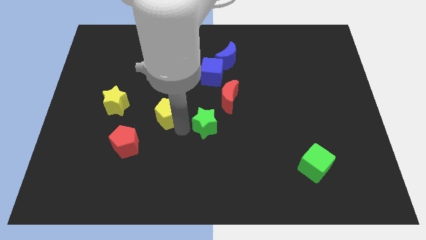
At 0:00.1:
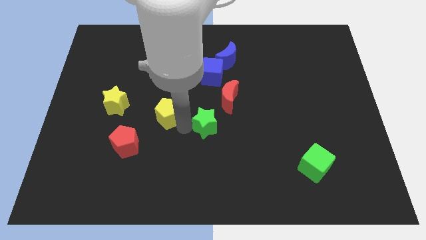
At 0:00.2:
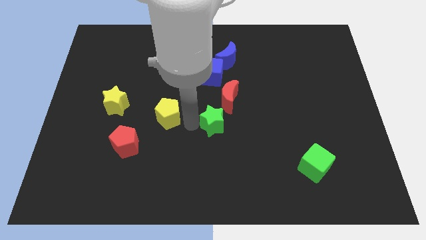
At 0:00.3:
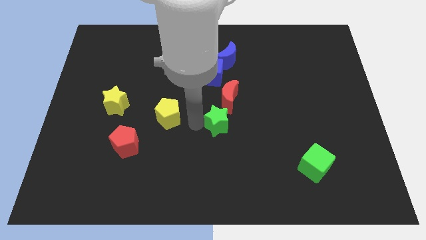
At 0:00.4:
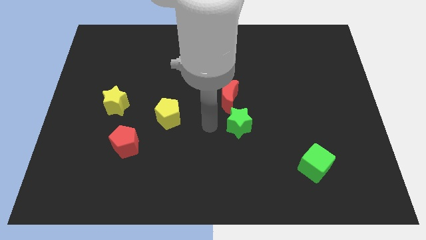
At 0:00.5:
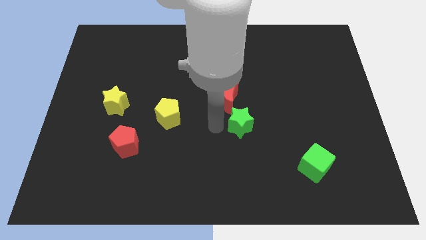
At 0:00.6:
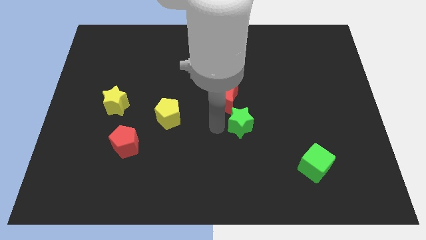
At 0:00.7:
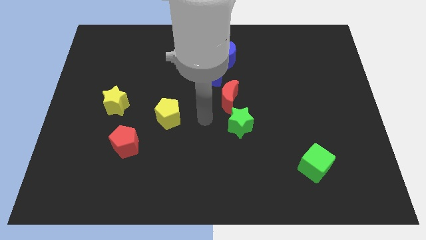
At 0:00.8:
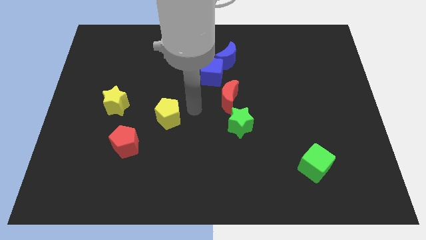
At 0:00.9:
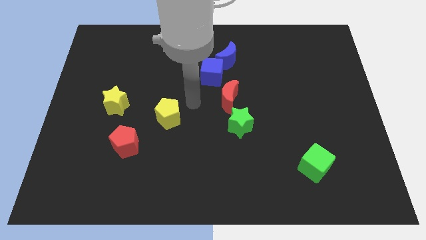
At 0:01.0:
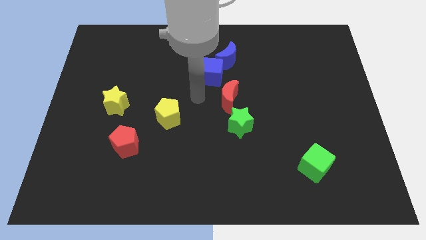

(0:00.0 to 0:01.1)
push the green star slightly to the right

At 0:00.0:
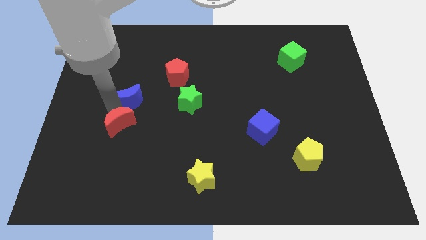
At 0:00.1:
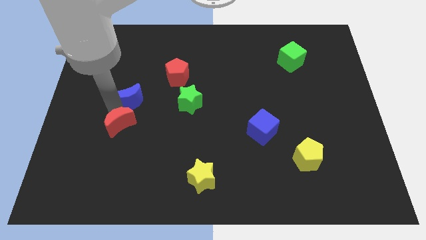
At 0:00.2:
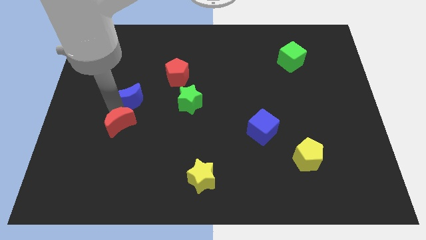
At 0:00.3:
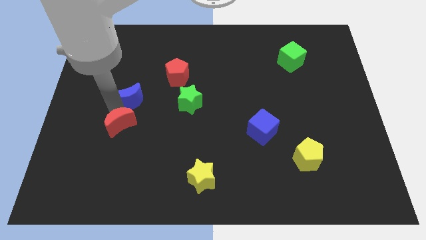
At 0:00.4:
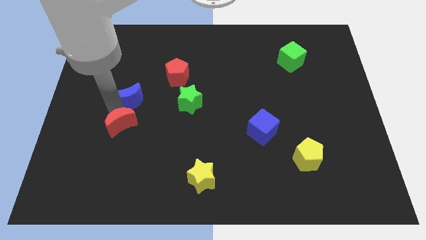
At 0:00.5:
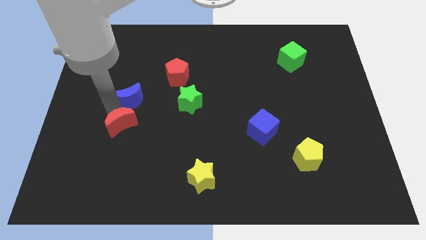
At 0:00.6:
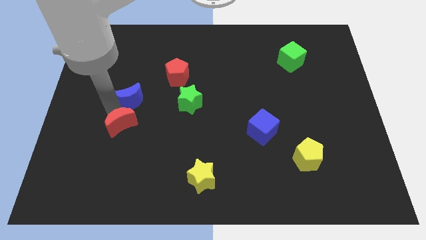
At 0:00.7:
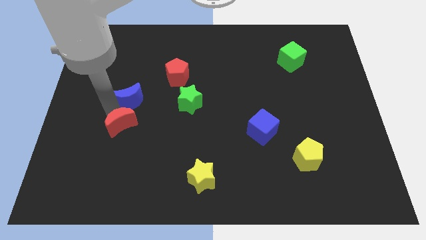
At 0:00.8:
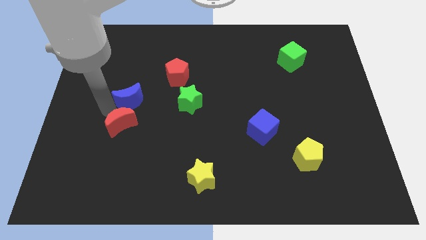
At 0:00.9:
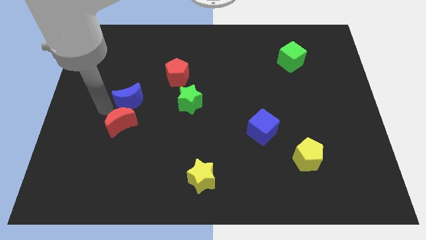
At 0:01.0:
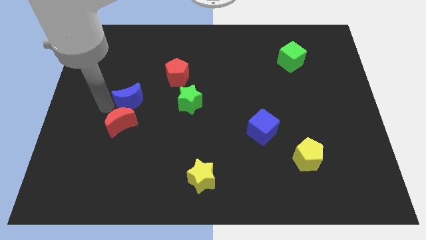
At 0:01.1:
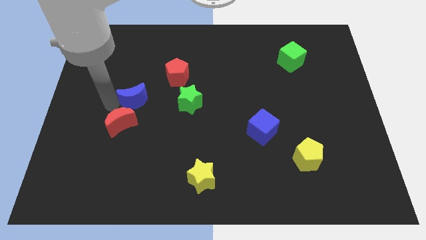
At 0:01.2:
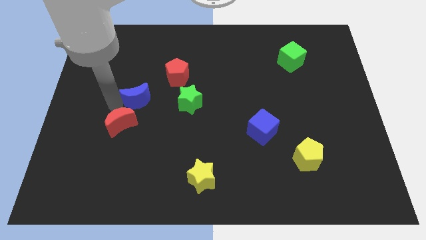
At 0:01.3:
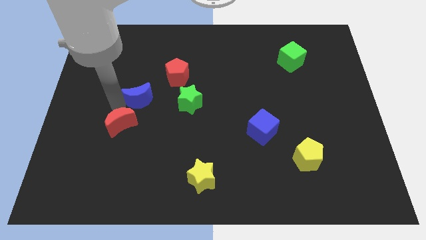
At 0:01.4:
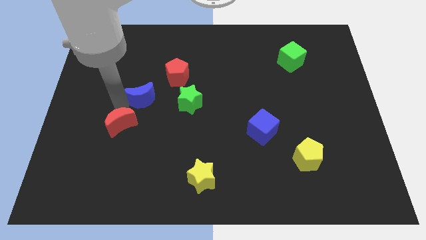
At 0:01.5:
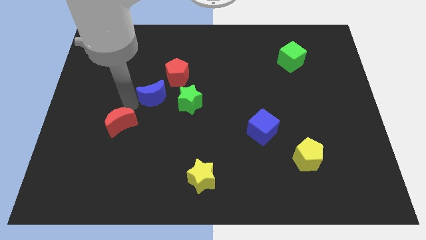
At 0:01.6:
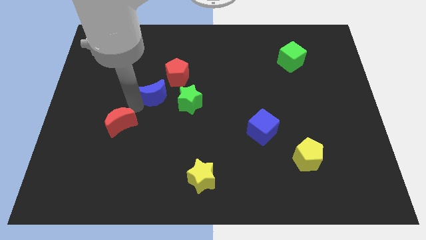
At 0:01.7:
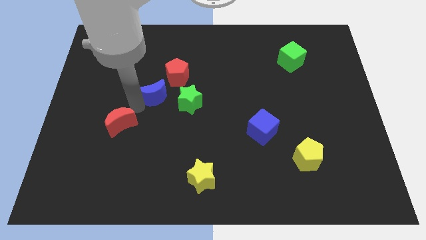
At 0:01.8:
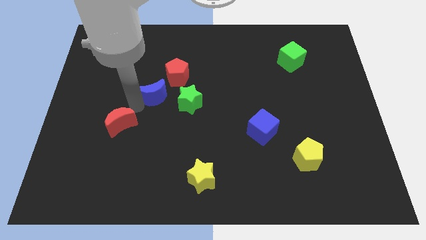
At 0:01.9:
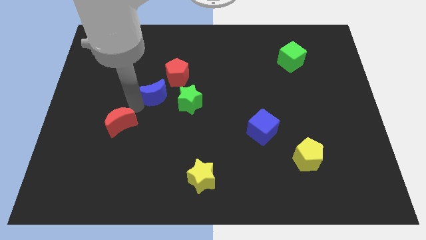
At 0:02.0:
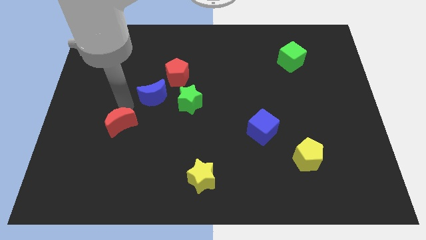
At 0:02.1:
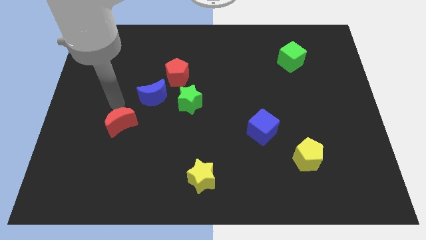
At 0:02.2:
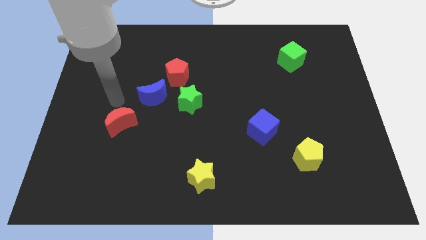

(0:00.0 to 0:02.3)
push the blue crescent between red blocks

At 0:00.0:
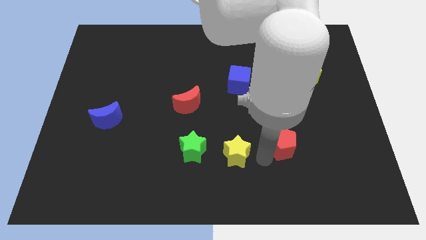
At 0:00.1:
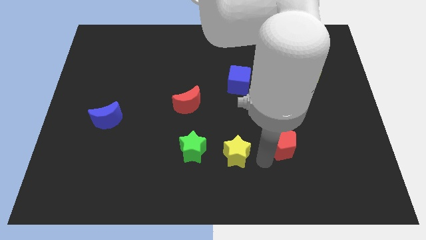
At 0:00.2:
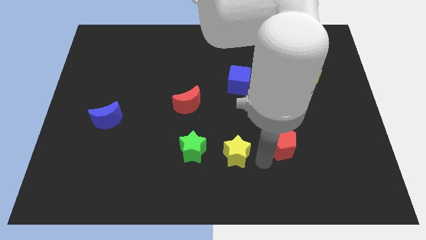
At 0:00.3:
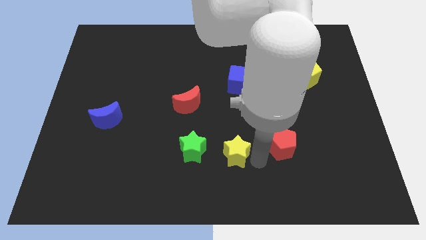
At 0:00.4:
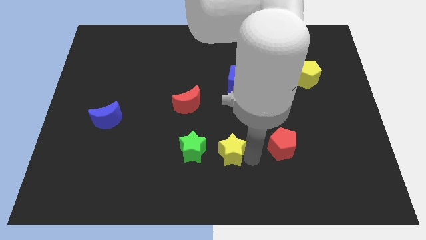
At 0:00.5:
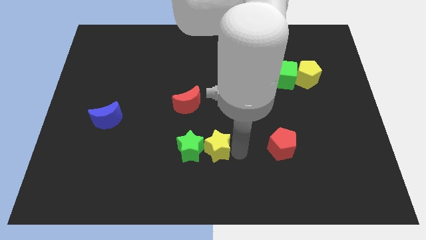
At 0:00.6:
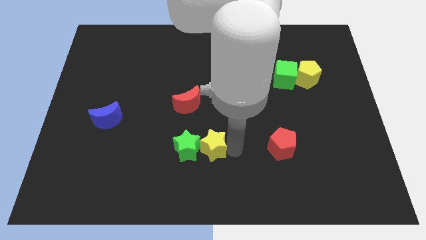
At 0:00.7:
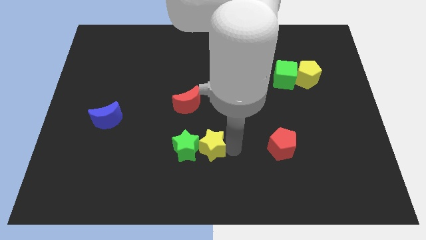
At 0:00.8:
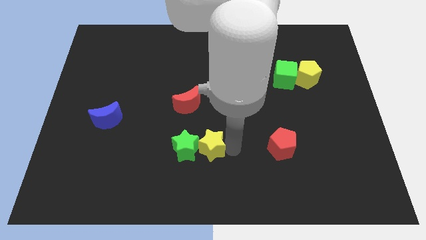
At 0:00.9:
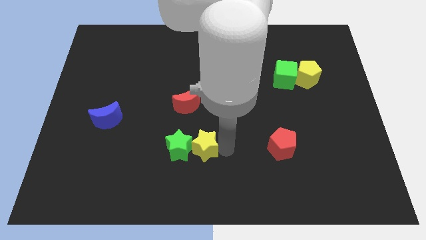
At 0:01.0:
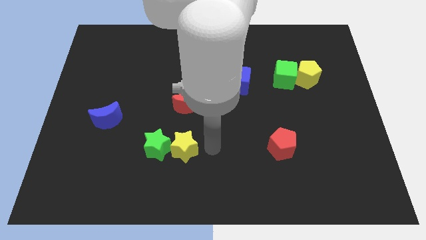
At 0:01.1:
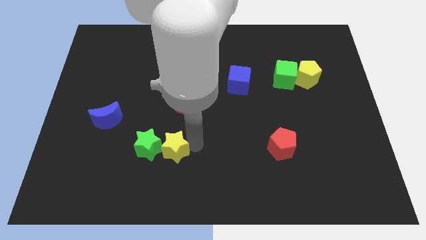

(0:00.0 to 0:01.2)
push yellow star in to green star

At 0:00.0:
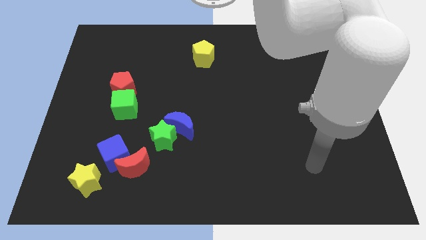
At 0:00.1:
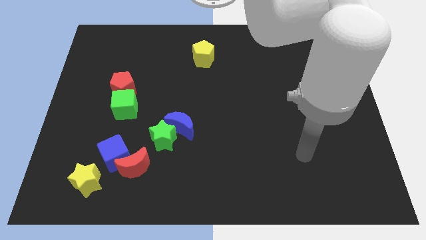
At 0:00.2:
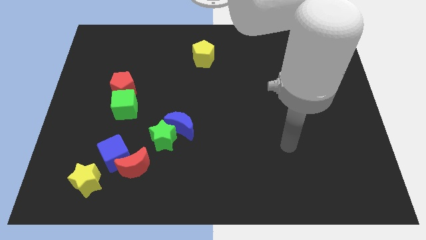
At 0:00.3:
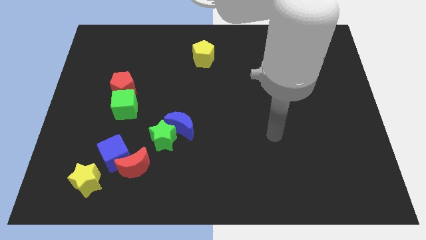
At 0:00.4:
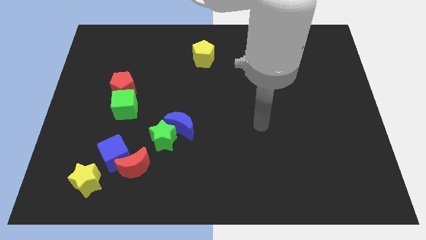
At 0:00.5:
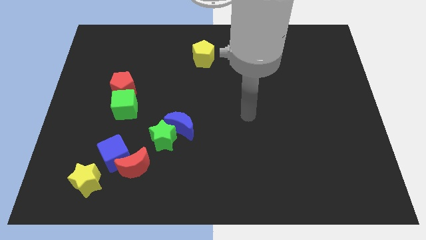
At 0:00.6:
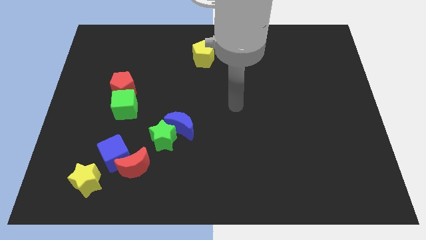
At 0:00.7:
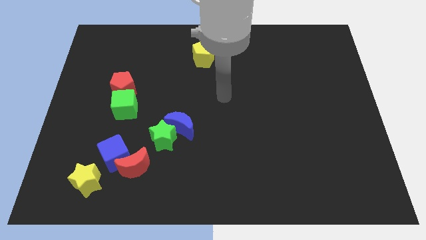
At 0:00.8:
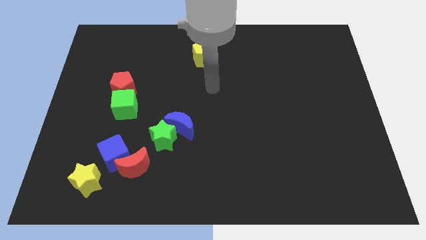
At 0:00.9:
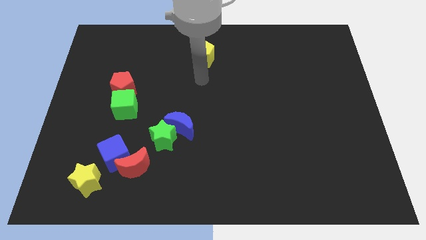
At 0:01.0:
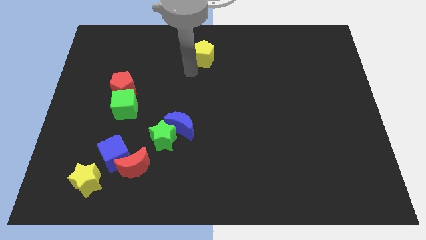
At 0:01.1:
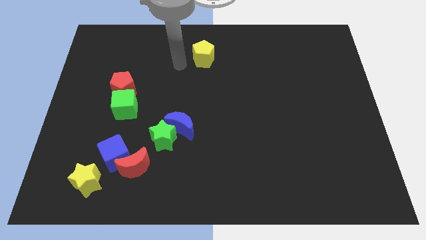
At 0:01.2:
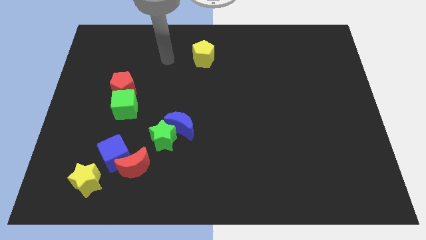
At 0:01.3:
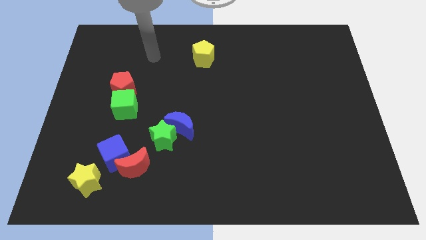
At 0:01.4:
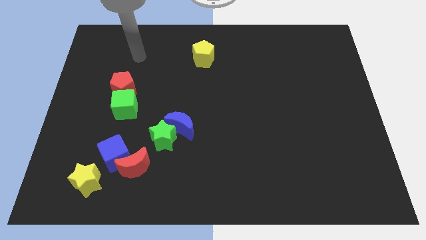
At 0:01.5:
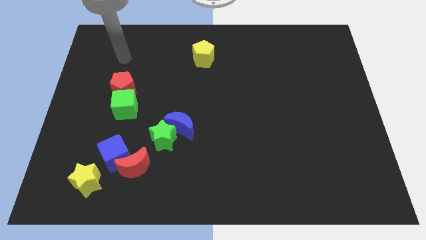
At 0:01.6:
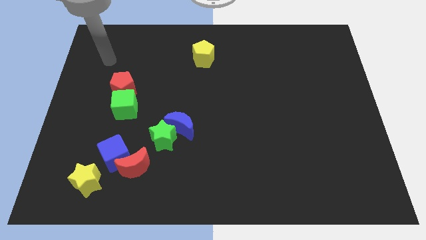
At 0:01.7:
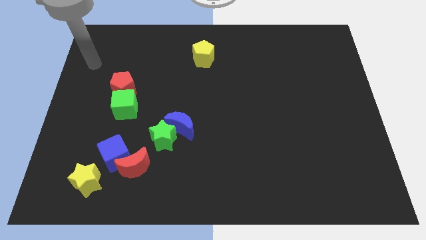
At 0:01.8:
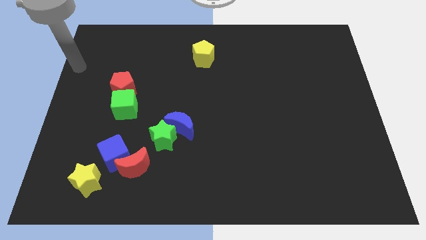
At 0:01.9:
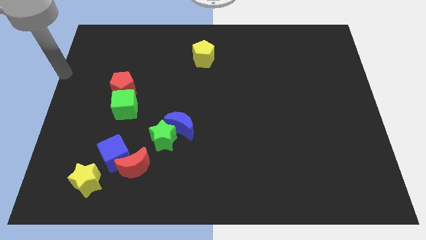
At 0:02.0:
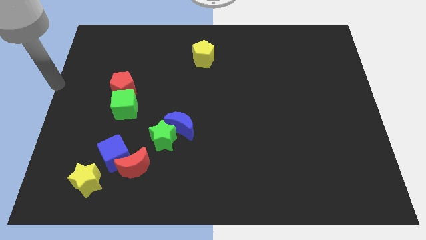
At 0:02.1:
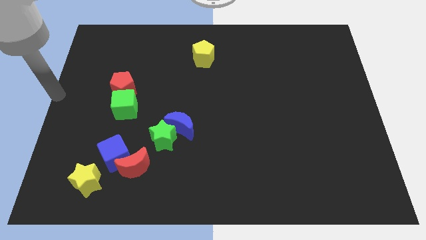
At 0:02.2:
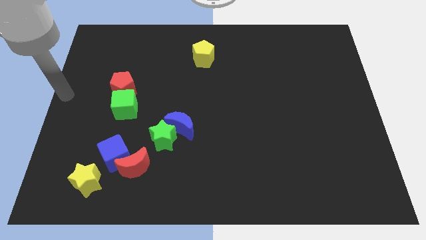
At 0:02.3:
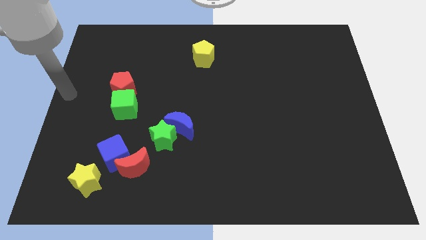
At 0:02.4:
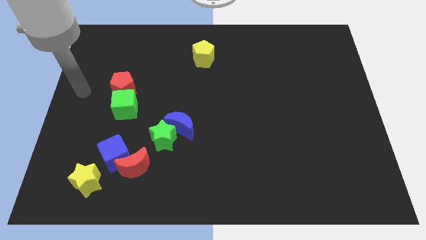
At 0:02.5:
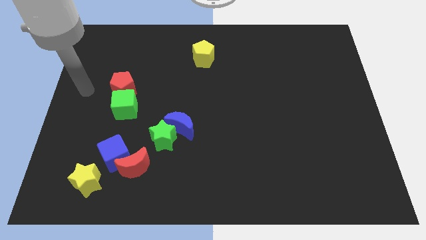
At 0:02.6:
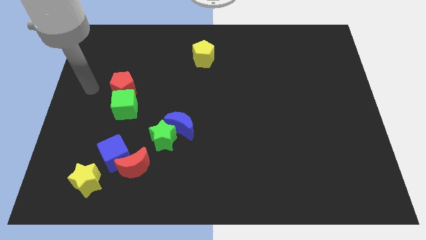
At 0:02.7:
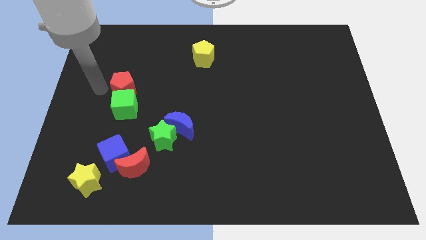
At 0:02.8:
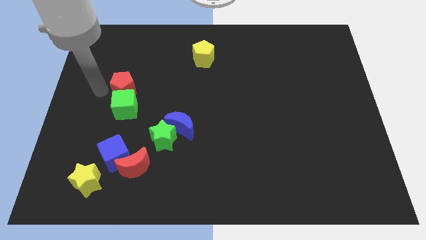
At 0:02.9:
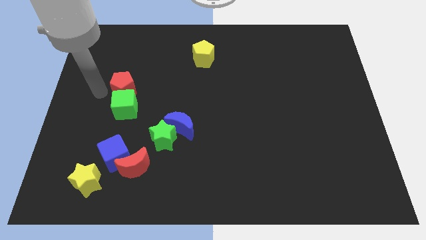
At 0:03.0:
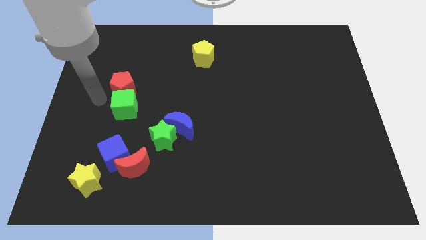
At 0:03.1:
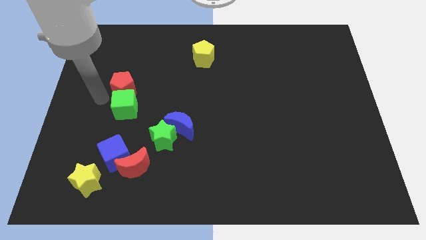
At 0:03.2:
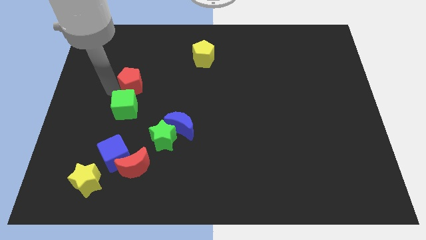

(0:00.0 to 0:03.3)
point your arm at the left of the green cube

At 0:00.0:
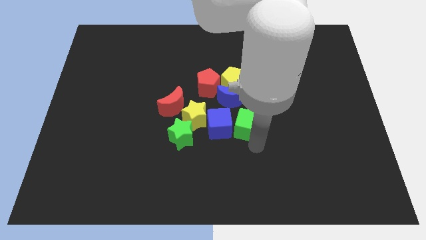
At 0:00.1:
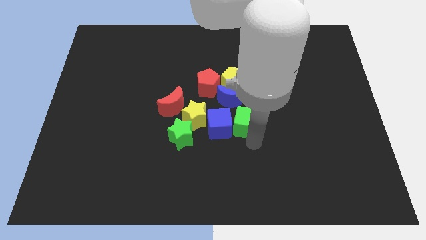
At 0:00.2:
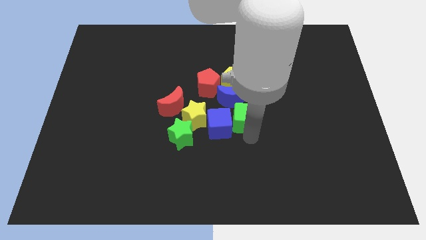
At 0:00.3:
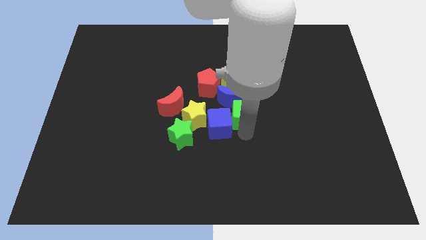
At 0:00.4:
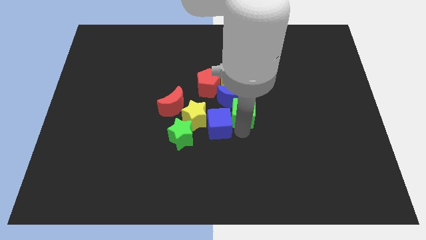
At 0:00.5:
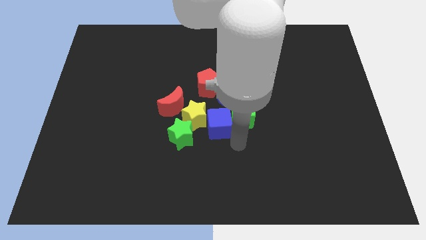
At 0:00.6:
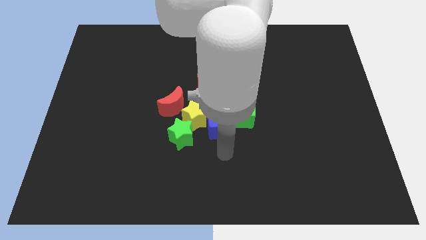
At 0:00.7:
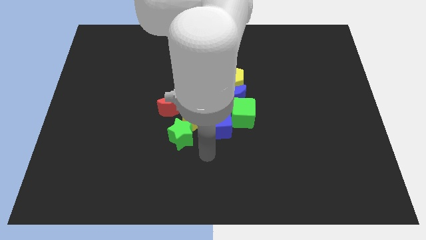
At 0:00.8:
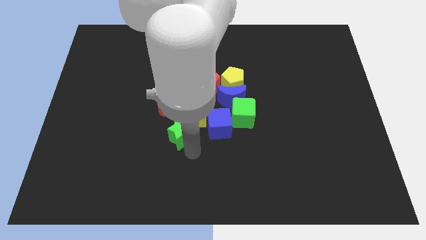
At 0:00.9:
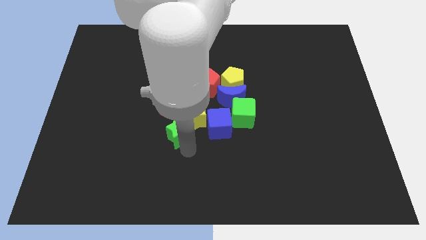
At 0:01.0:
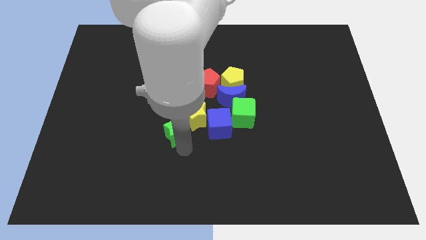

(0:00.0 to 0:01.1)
slide green cube towards blue moon
